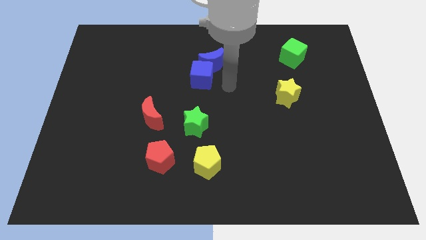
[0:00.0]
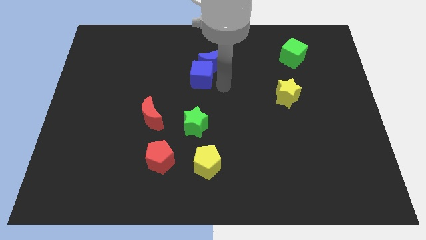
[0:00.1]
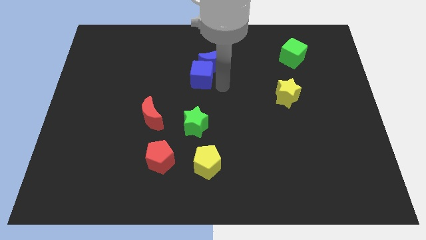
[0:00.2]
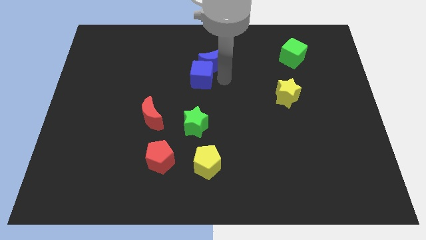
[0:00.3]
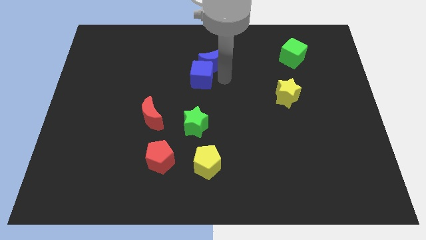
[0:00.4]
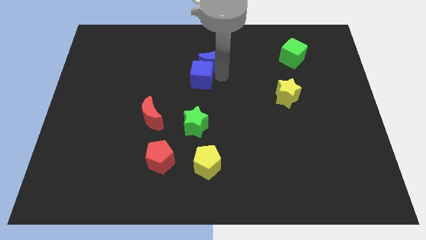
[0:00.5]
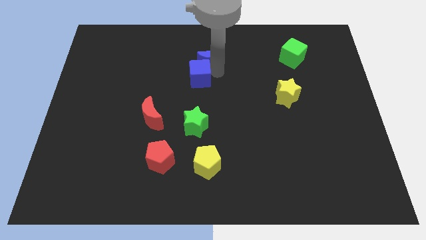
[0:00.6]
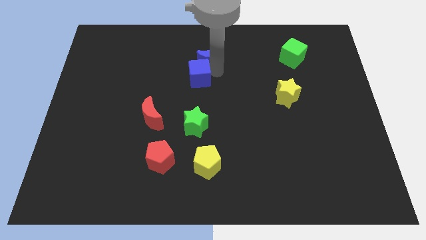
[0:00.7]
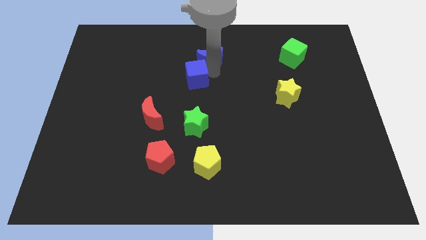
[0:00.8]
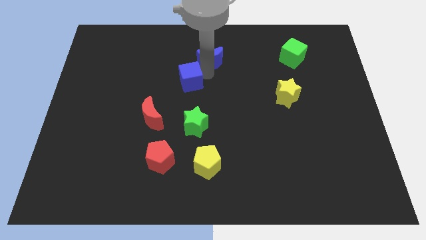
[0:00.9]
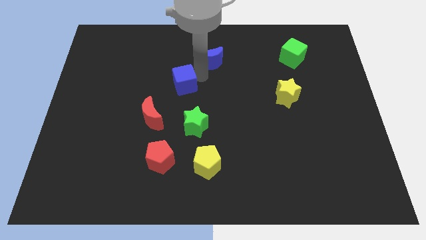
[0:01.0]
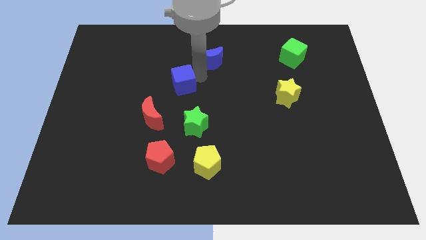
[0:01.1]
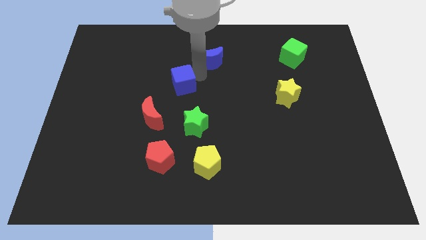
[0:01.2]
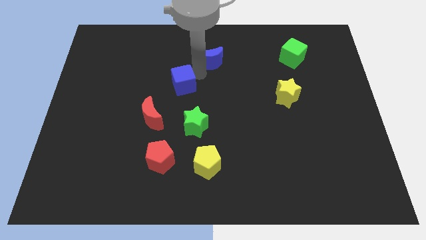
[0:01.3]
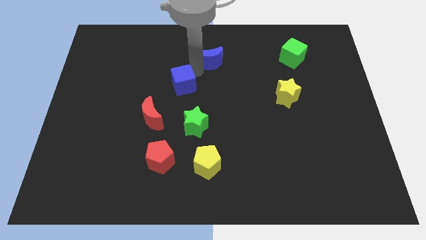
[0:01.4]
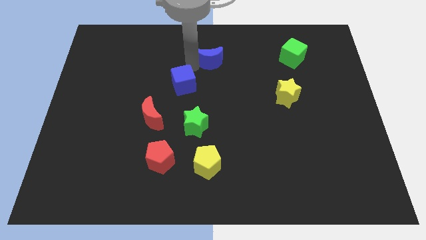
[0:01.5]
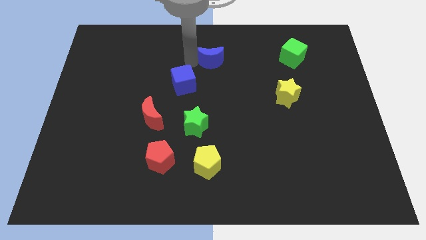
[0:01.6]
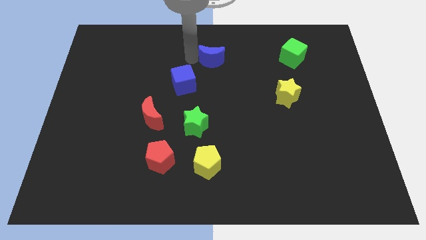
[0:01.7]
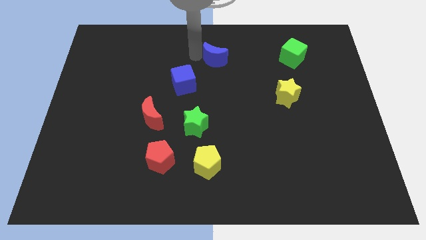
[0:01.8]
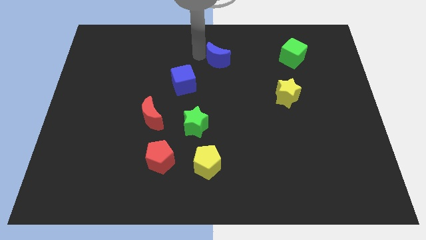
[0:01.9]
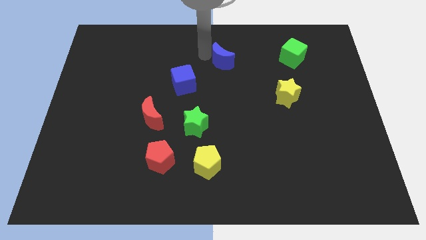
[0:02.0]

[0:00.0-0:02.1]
separate blue moon from blue cube

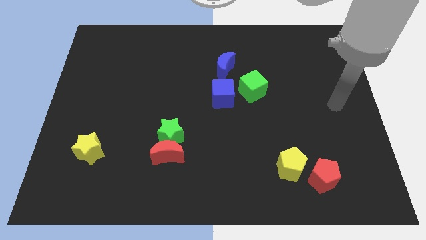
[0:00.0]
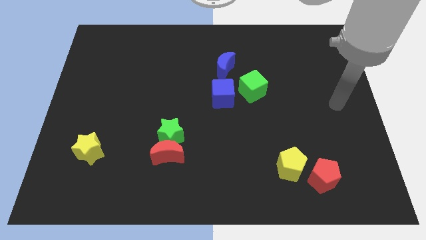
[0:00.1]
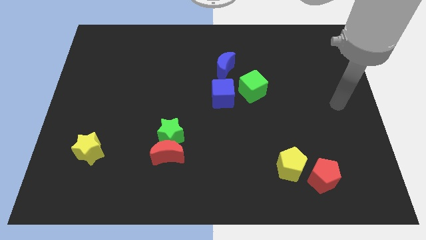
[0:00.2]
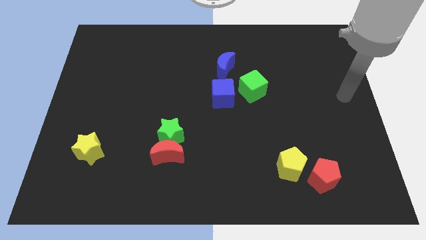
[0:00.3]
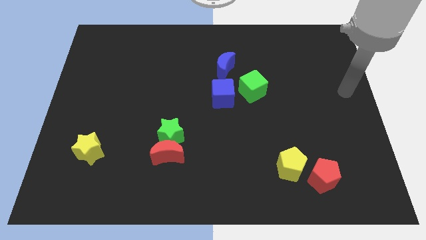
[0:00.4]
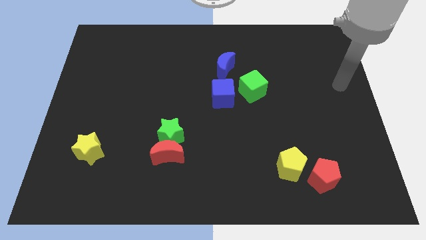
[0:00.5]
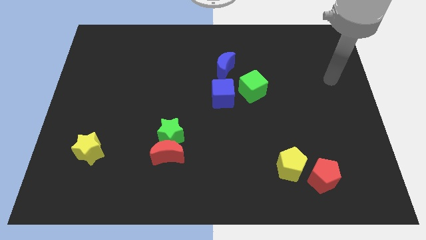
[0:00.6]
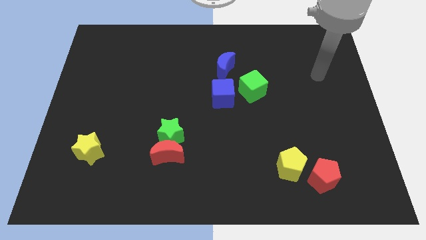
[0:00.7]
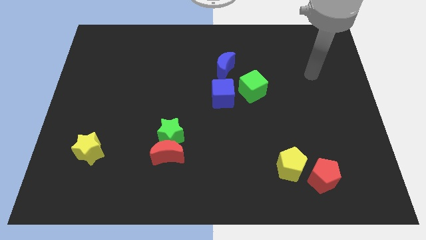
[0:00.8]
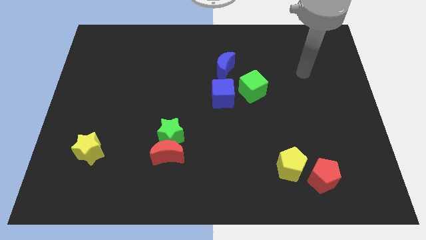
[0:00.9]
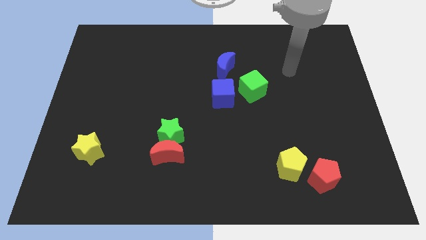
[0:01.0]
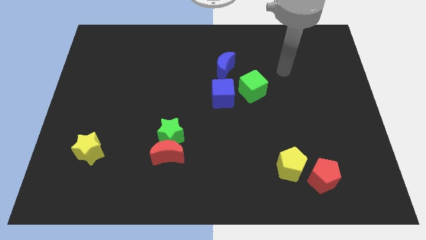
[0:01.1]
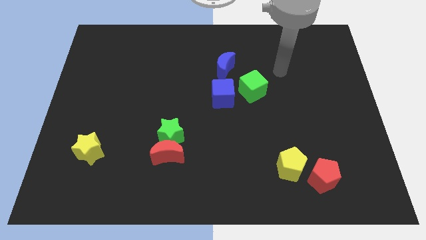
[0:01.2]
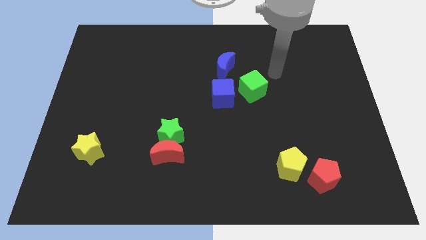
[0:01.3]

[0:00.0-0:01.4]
move your arm to the top right of the green cube

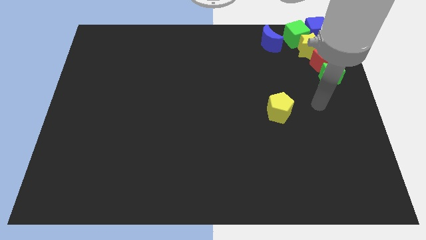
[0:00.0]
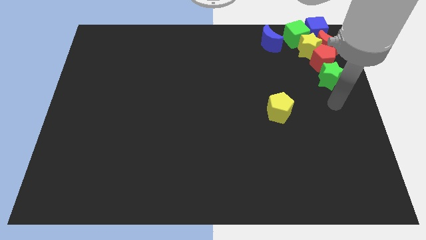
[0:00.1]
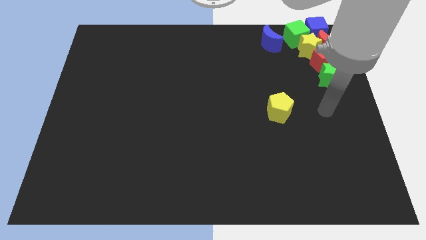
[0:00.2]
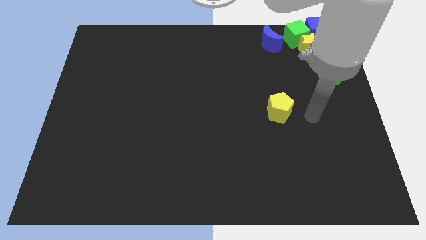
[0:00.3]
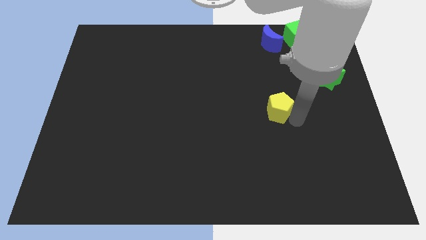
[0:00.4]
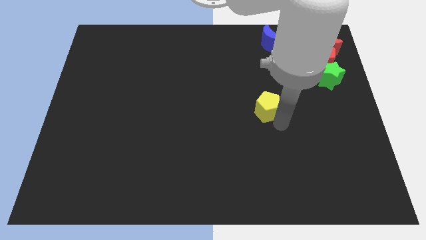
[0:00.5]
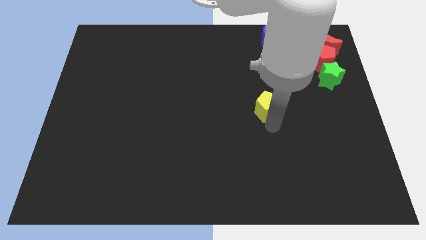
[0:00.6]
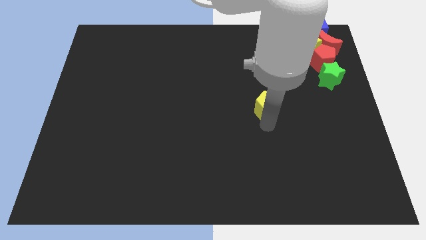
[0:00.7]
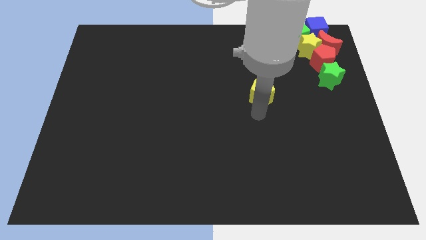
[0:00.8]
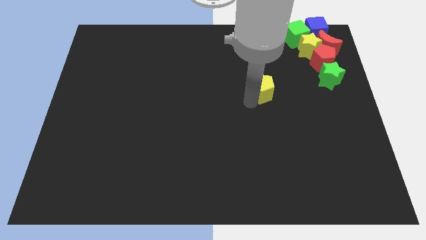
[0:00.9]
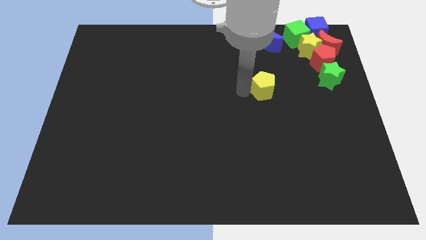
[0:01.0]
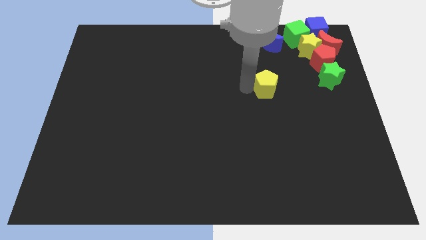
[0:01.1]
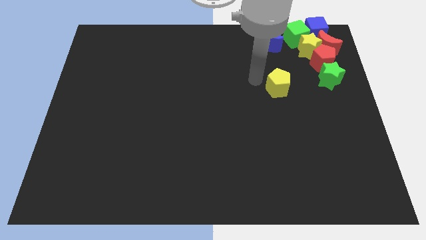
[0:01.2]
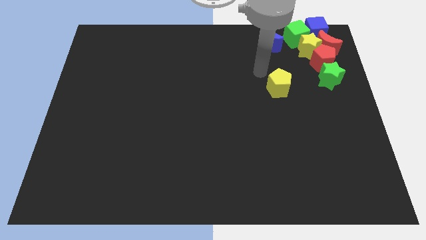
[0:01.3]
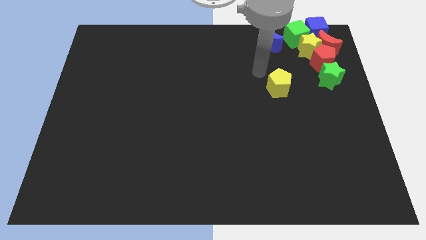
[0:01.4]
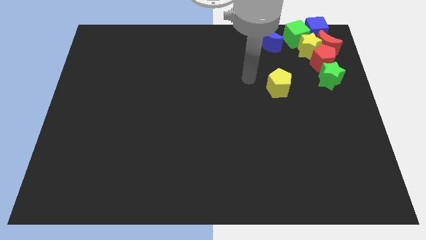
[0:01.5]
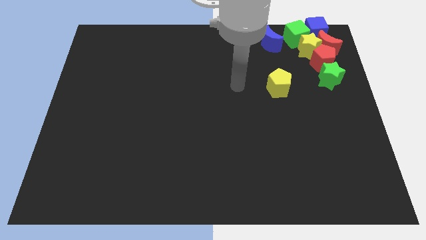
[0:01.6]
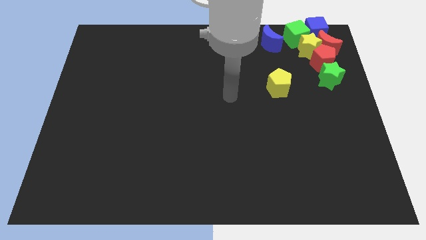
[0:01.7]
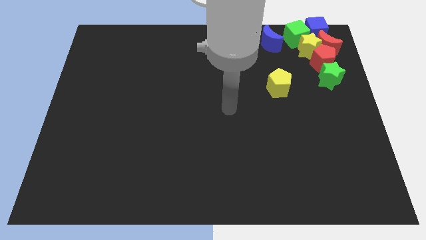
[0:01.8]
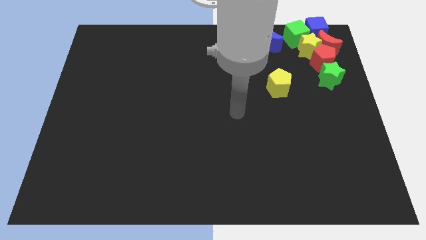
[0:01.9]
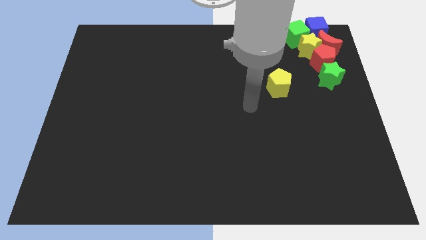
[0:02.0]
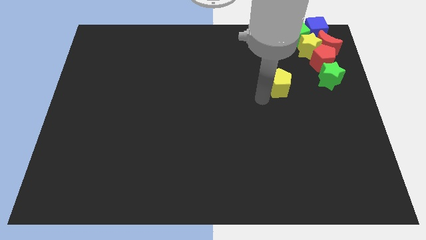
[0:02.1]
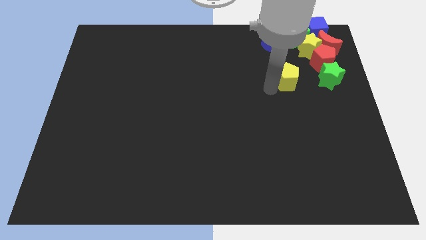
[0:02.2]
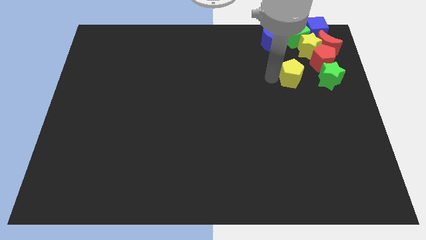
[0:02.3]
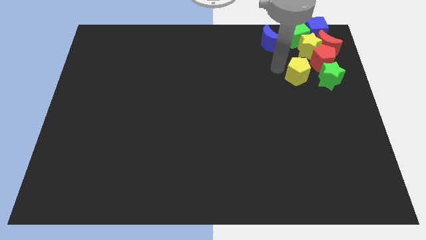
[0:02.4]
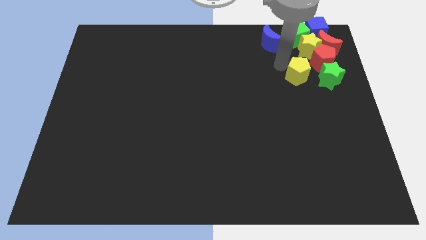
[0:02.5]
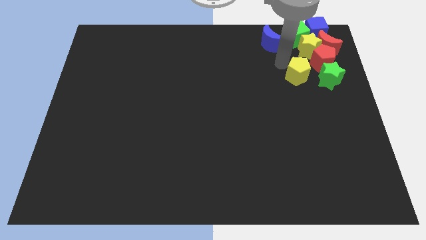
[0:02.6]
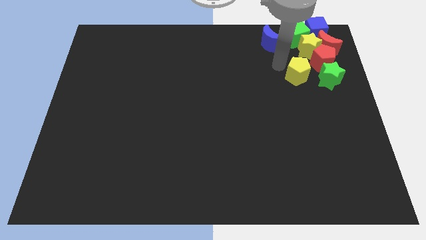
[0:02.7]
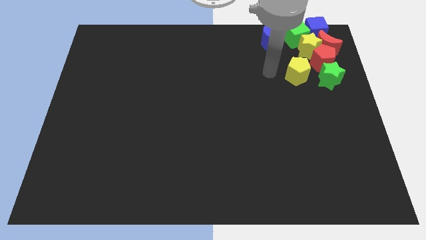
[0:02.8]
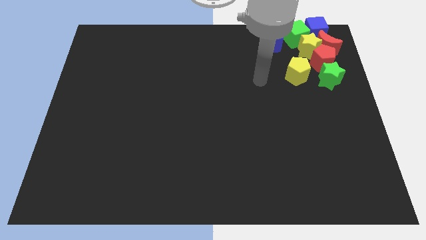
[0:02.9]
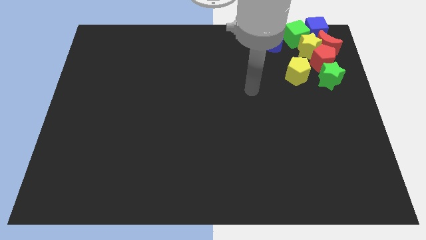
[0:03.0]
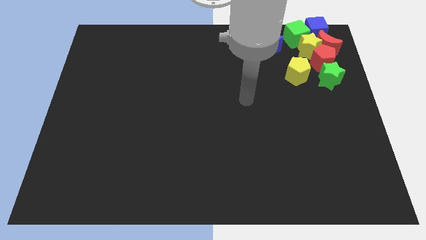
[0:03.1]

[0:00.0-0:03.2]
push the yellow pentagon towards the top right corner

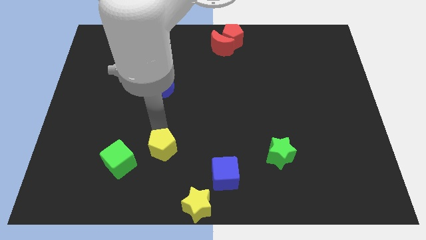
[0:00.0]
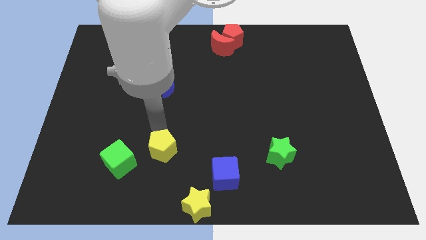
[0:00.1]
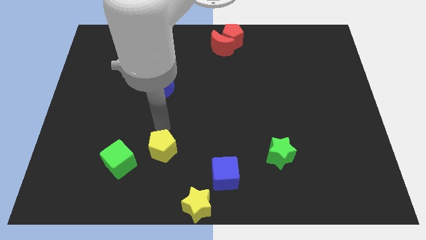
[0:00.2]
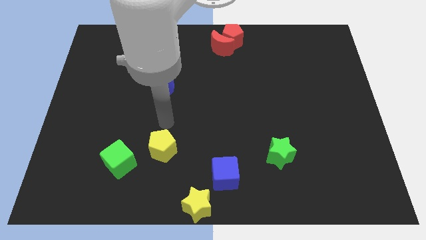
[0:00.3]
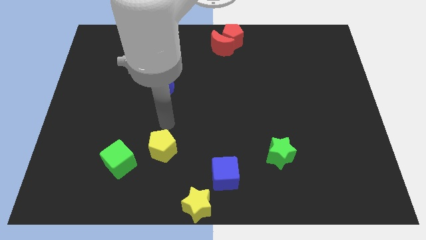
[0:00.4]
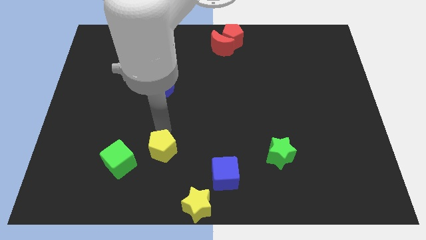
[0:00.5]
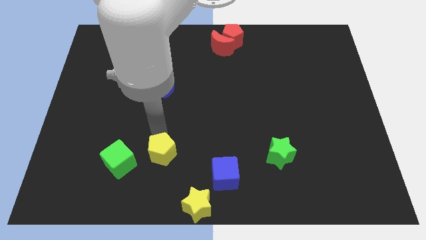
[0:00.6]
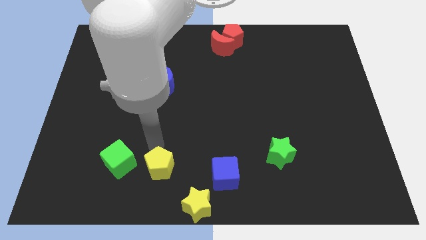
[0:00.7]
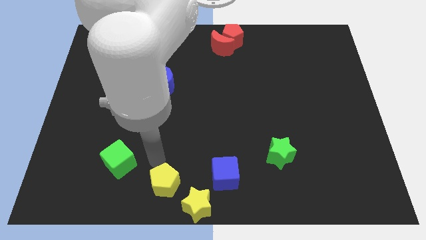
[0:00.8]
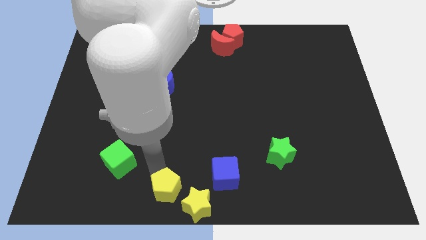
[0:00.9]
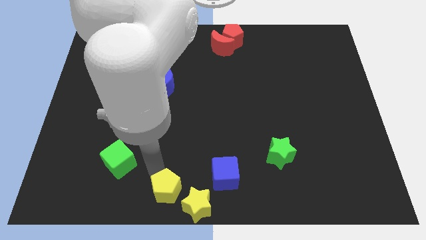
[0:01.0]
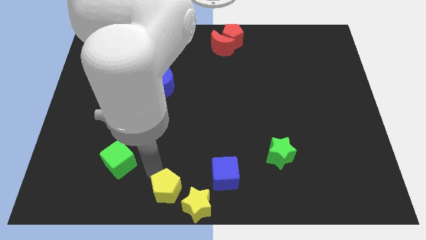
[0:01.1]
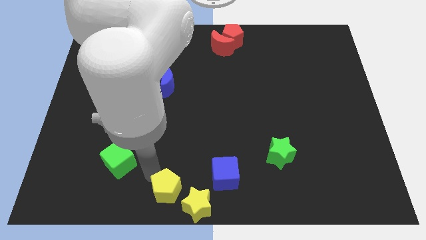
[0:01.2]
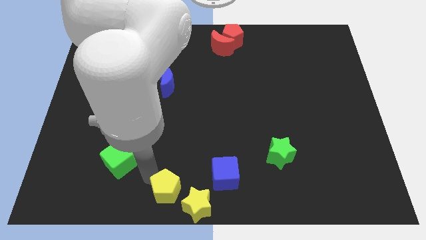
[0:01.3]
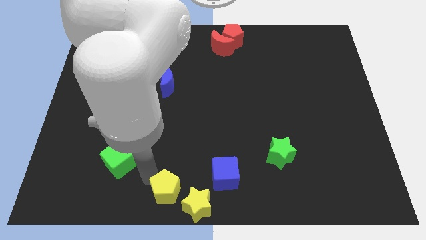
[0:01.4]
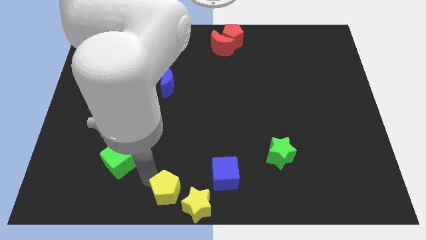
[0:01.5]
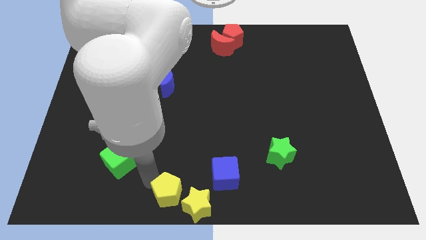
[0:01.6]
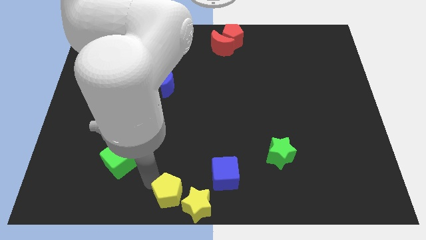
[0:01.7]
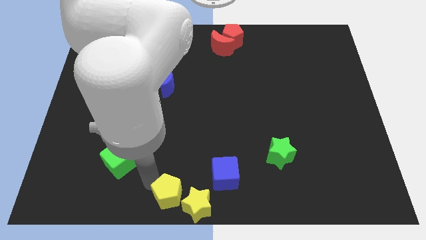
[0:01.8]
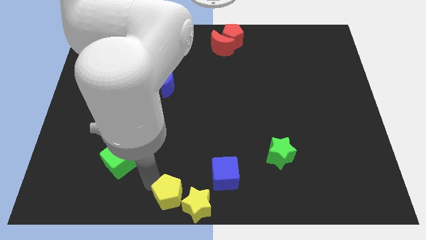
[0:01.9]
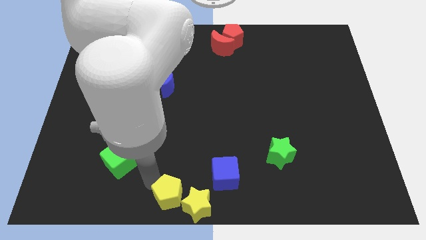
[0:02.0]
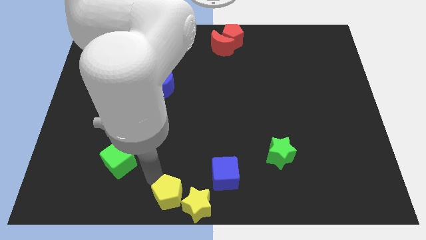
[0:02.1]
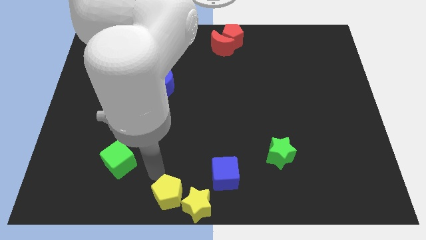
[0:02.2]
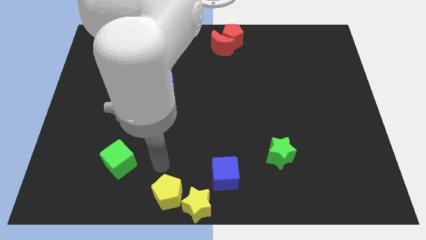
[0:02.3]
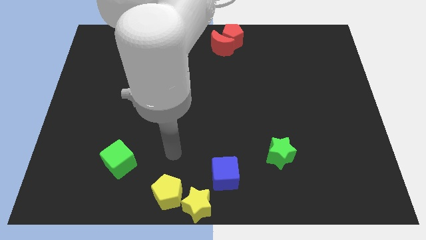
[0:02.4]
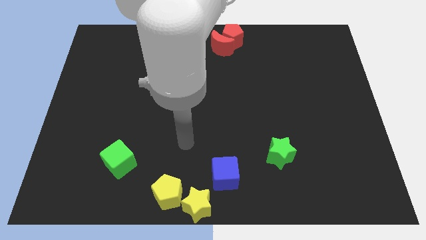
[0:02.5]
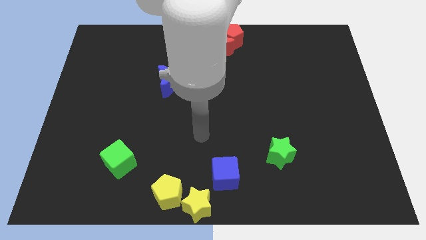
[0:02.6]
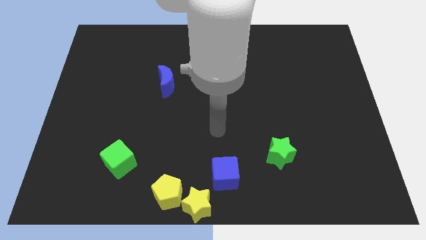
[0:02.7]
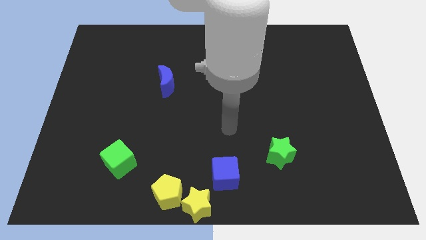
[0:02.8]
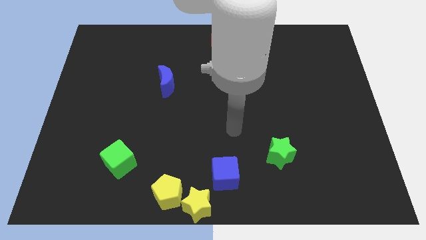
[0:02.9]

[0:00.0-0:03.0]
place the yellow pentagon close to the yellow star
